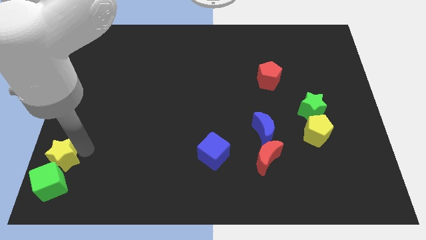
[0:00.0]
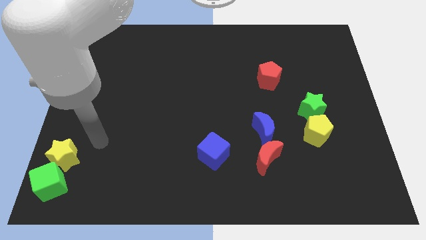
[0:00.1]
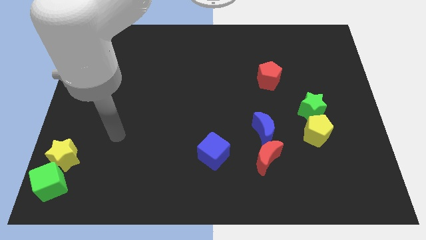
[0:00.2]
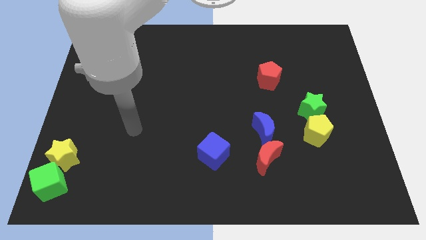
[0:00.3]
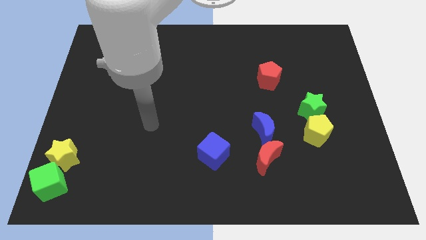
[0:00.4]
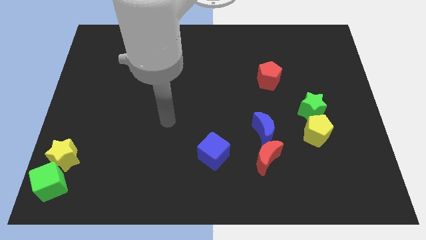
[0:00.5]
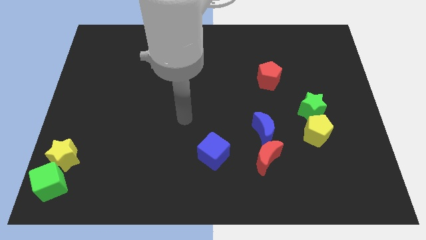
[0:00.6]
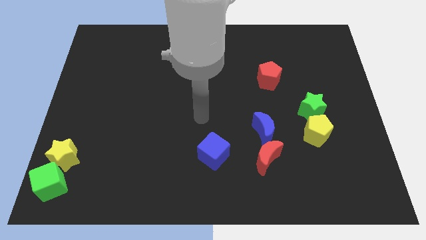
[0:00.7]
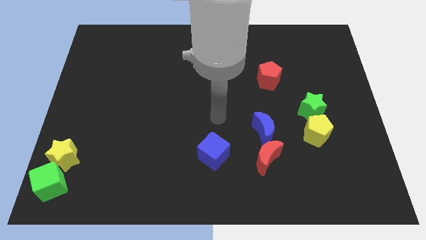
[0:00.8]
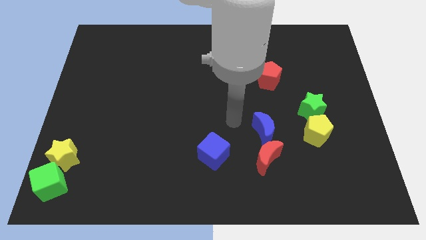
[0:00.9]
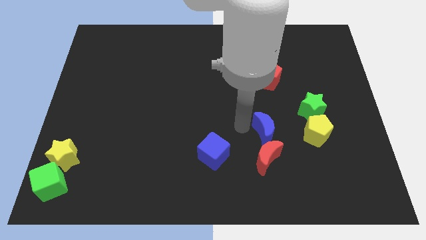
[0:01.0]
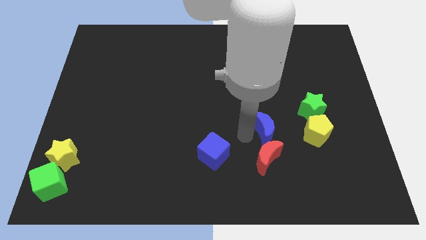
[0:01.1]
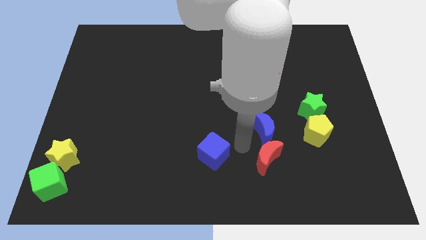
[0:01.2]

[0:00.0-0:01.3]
place your arm to the right of blue cube

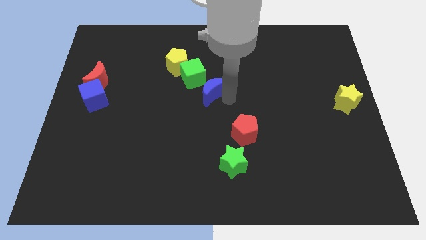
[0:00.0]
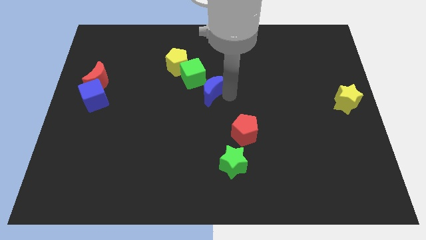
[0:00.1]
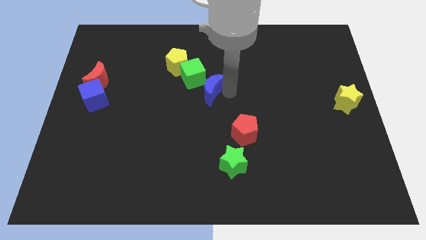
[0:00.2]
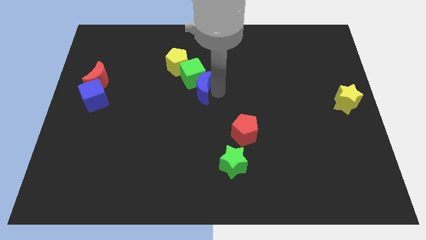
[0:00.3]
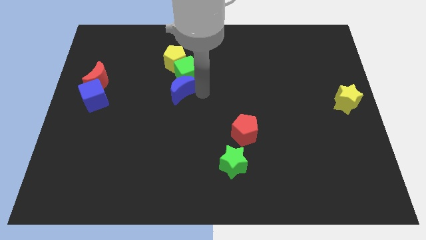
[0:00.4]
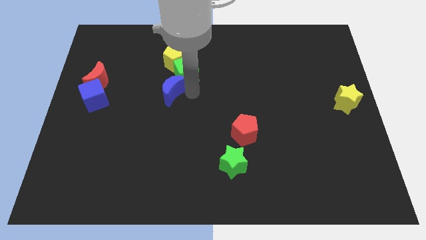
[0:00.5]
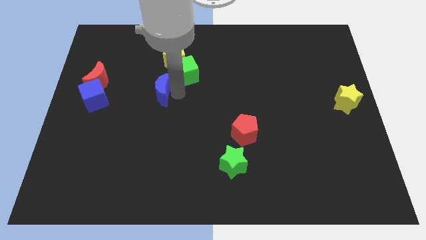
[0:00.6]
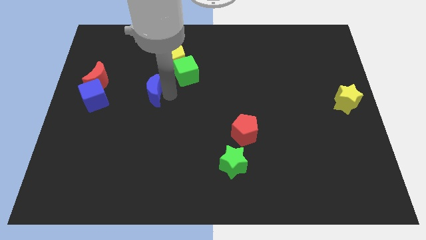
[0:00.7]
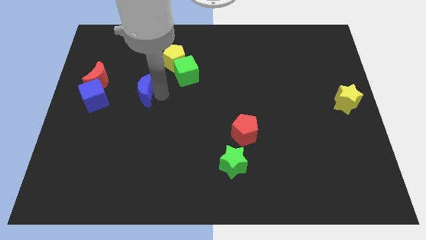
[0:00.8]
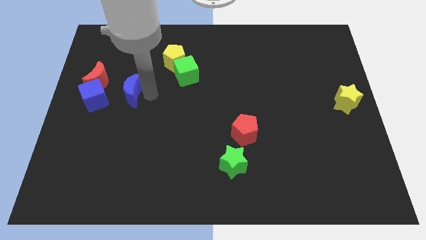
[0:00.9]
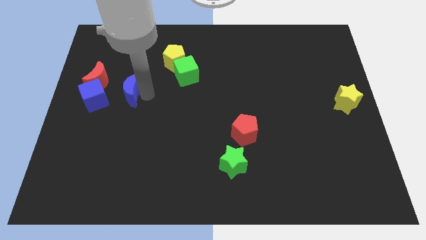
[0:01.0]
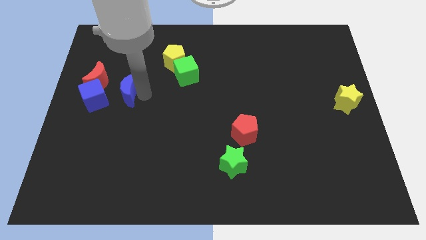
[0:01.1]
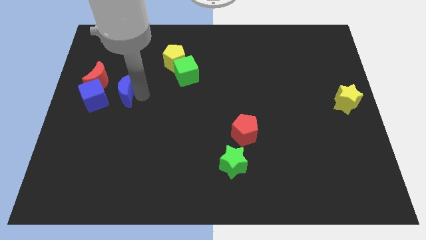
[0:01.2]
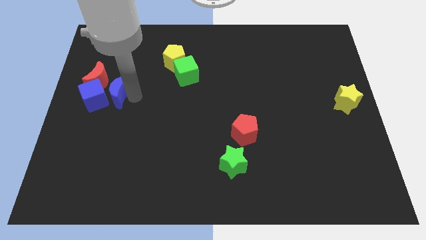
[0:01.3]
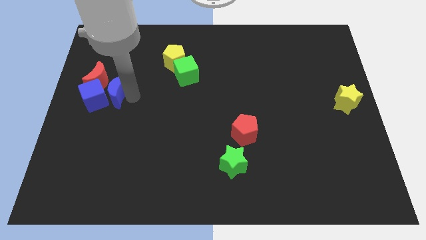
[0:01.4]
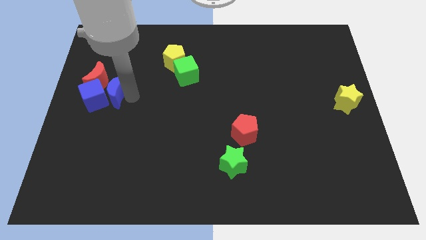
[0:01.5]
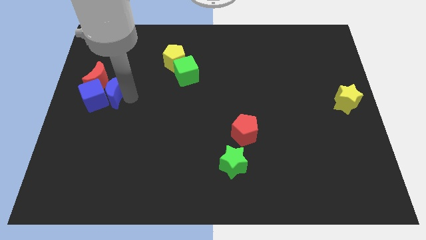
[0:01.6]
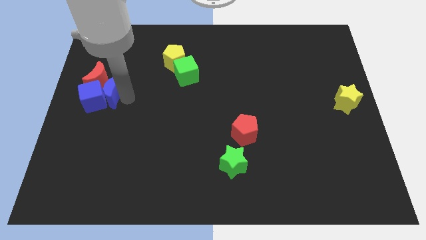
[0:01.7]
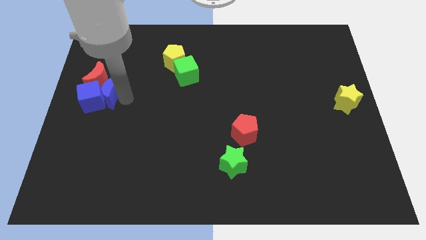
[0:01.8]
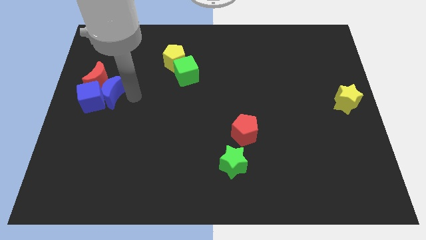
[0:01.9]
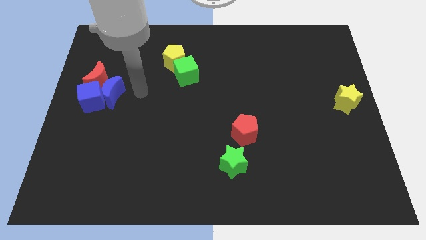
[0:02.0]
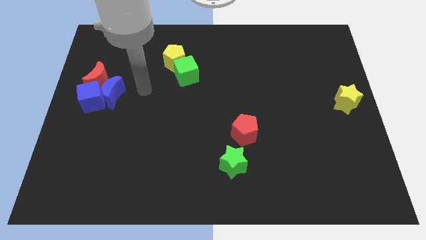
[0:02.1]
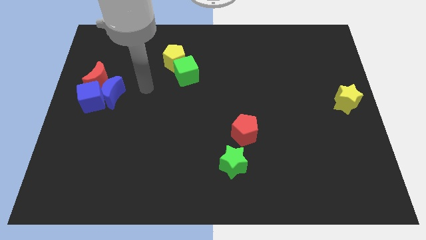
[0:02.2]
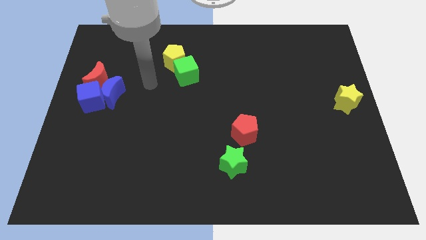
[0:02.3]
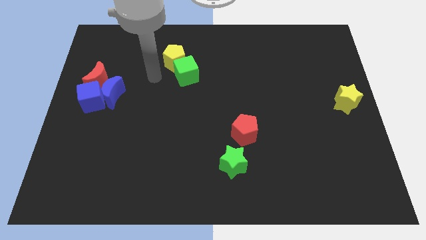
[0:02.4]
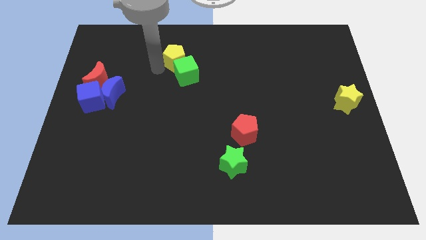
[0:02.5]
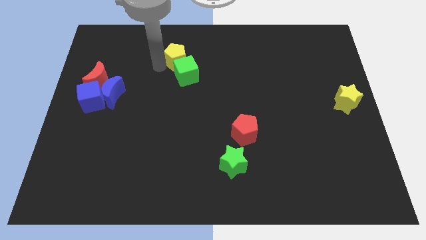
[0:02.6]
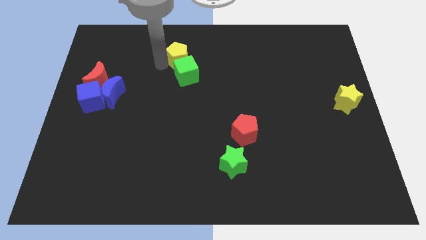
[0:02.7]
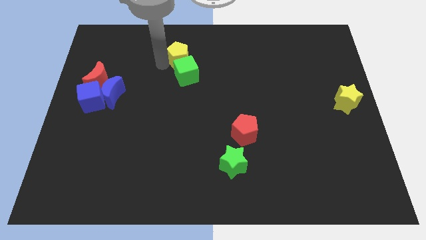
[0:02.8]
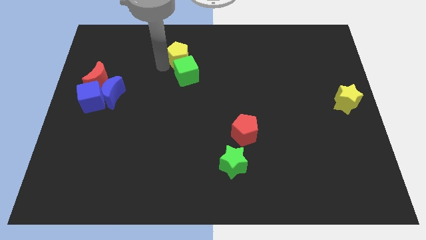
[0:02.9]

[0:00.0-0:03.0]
move the blue crescent right beside the blue cube and red crescent

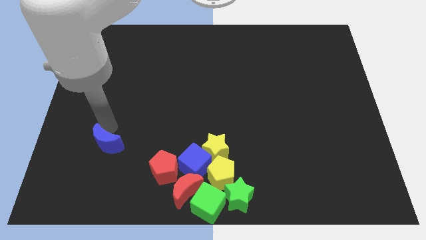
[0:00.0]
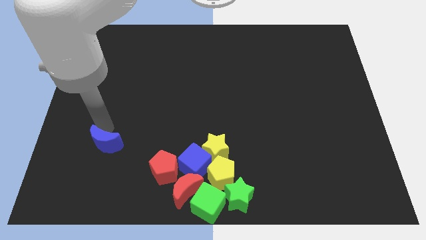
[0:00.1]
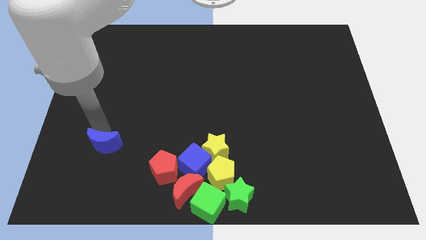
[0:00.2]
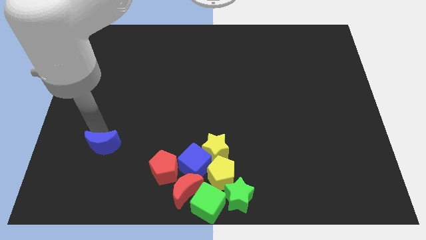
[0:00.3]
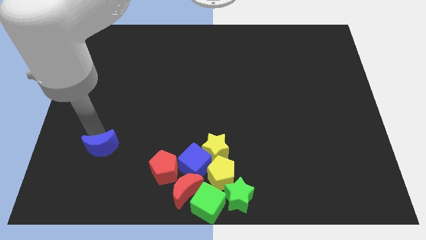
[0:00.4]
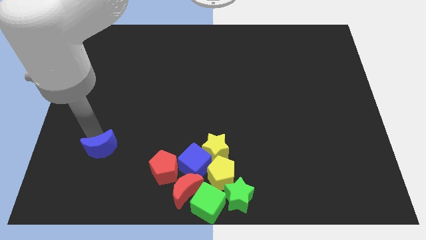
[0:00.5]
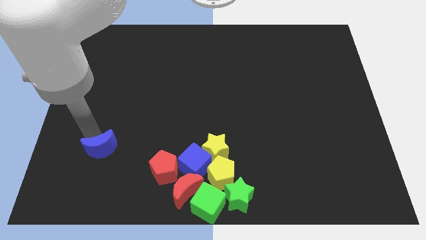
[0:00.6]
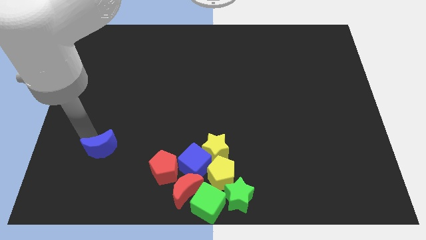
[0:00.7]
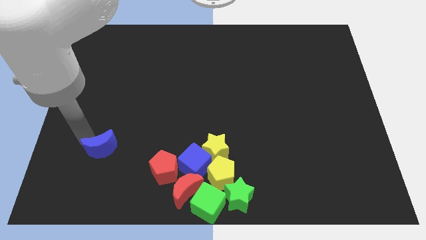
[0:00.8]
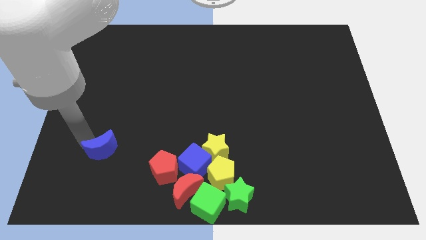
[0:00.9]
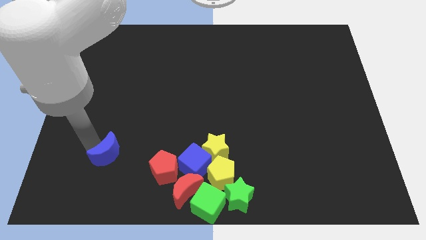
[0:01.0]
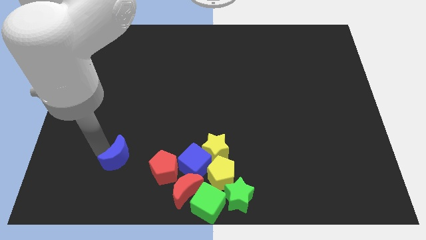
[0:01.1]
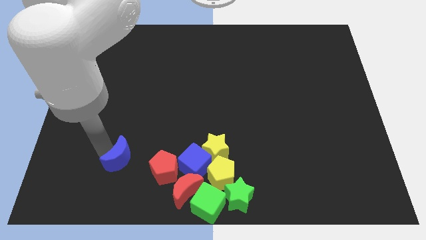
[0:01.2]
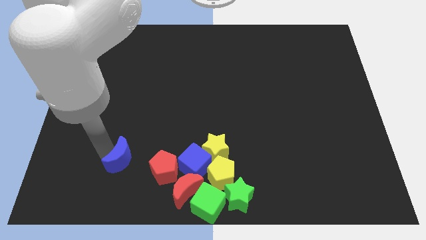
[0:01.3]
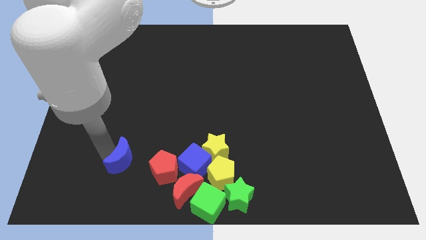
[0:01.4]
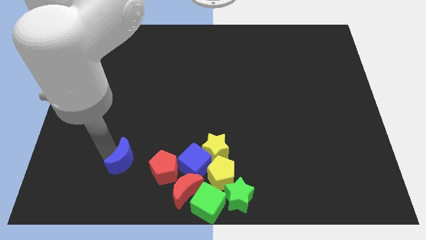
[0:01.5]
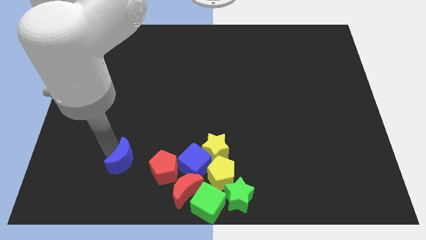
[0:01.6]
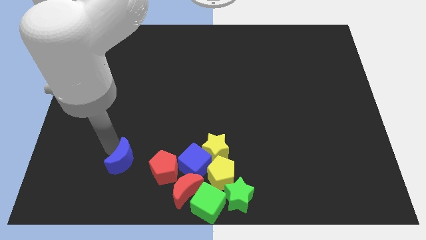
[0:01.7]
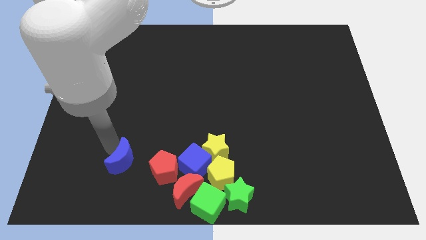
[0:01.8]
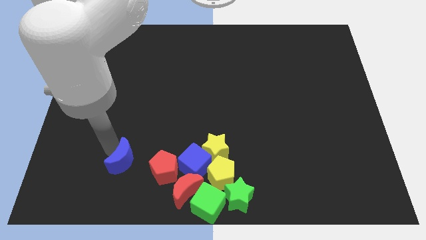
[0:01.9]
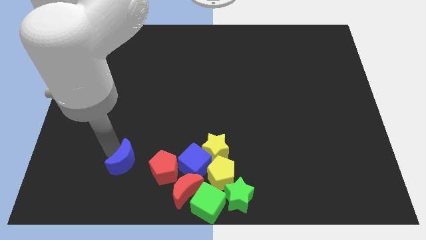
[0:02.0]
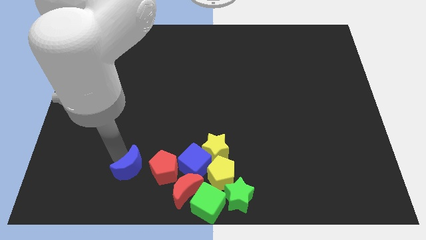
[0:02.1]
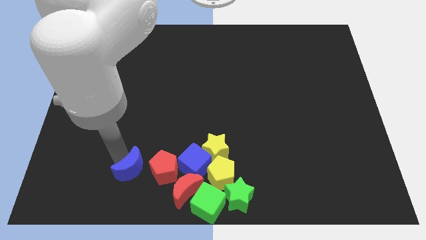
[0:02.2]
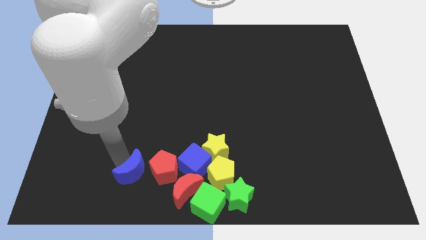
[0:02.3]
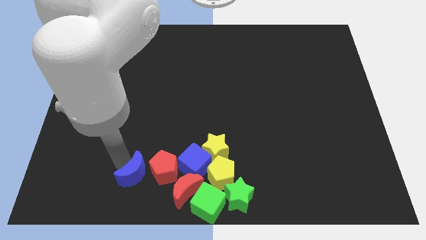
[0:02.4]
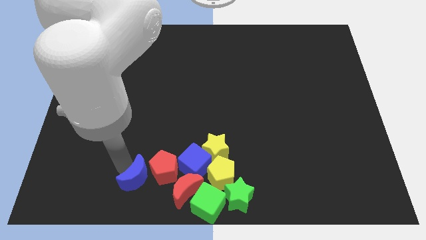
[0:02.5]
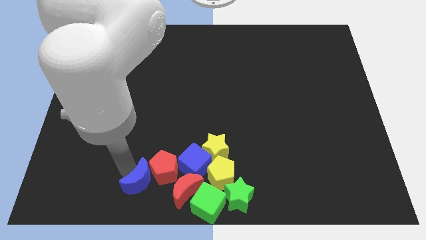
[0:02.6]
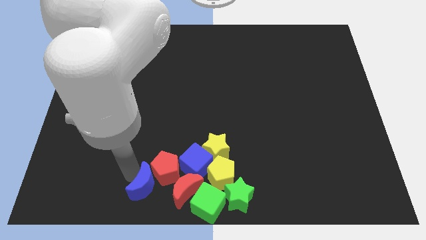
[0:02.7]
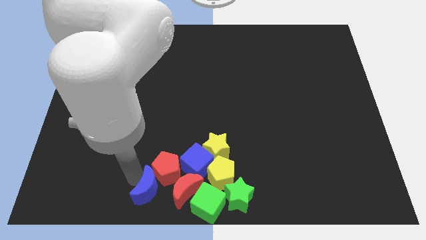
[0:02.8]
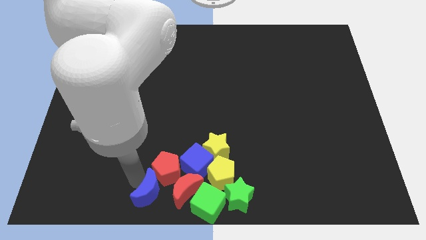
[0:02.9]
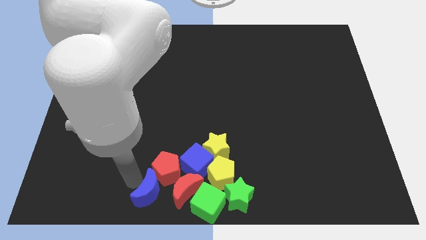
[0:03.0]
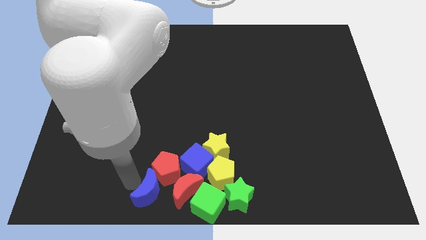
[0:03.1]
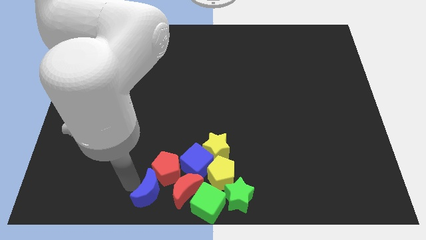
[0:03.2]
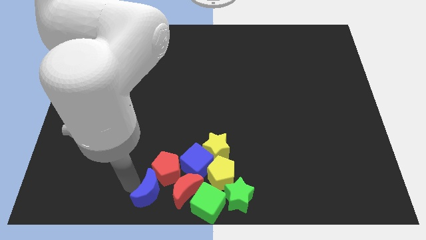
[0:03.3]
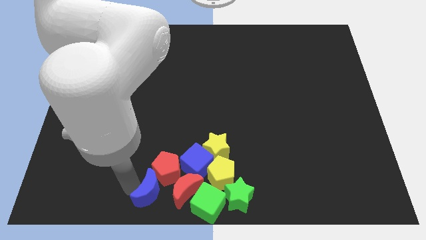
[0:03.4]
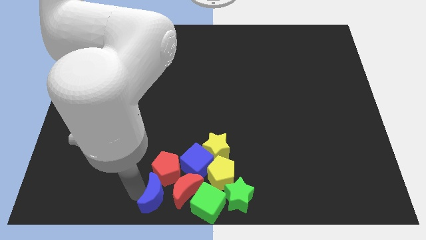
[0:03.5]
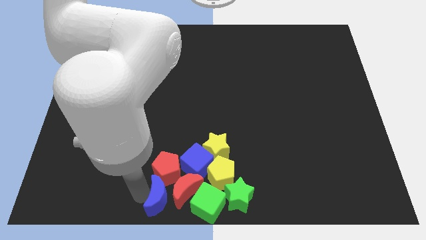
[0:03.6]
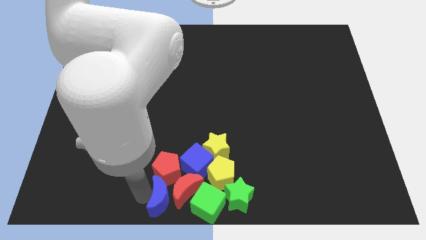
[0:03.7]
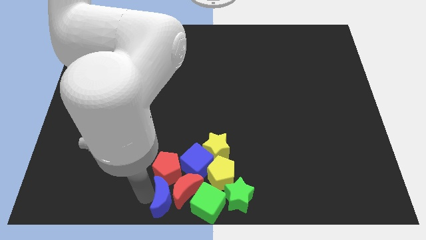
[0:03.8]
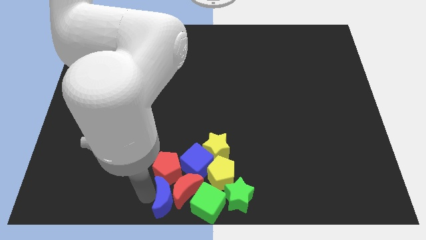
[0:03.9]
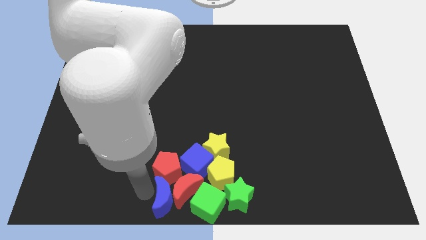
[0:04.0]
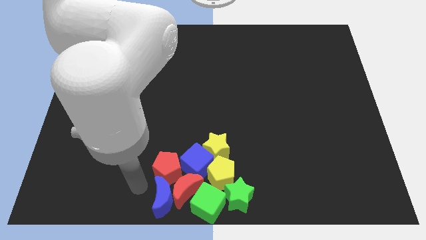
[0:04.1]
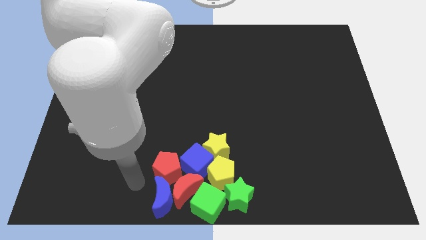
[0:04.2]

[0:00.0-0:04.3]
push the blue crescent to the bottom of the red pentagon

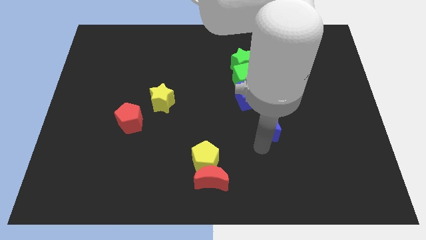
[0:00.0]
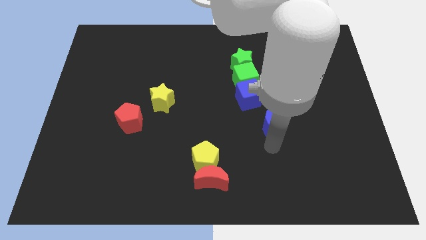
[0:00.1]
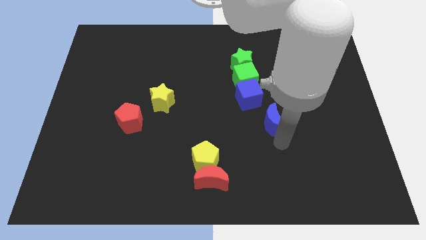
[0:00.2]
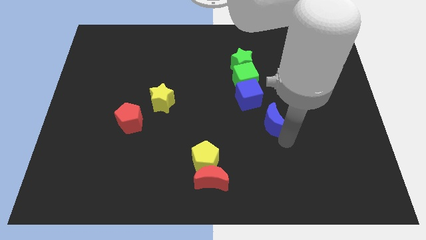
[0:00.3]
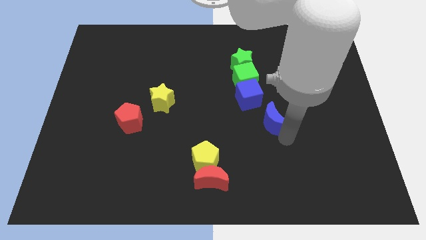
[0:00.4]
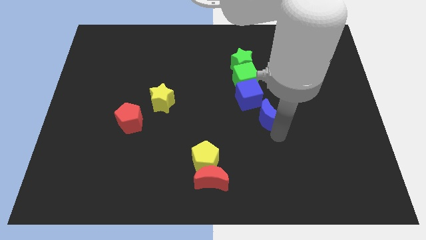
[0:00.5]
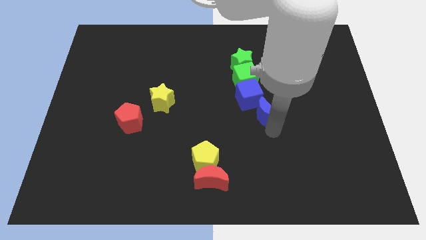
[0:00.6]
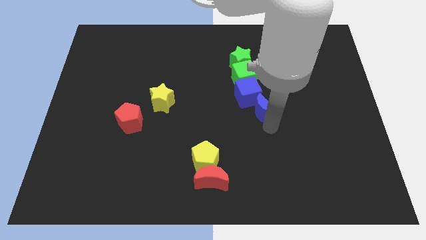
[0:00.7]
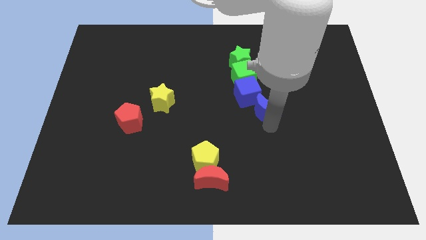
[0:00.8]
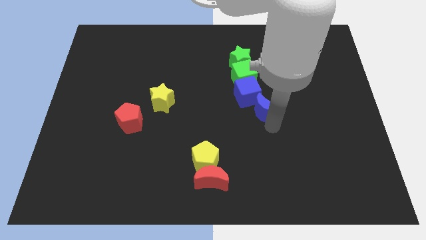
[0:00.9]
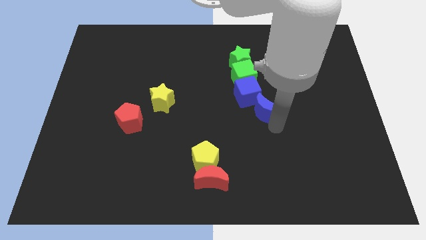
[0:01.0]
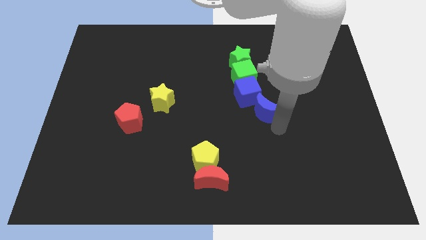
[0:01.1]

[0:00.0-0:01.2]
push the blue moon slightly upwards
